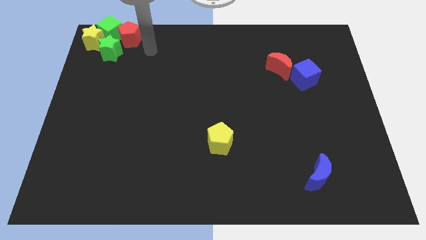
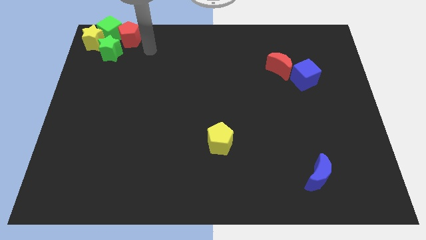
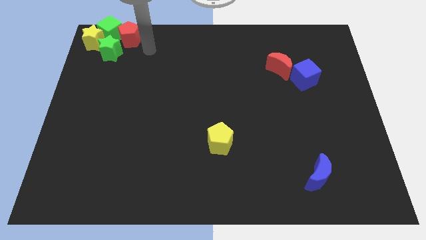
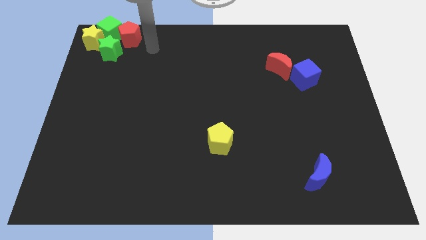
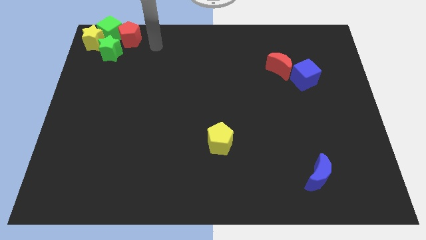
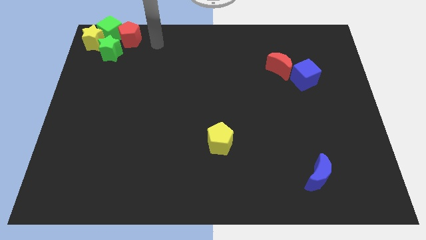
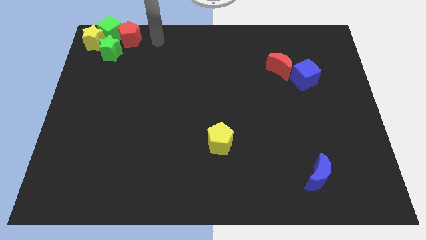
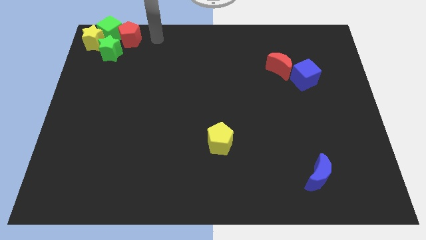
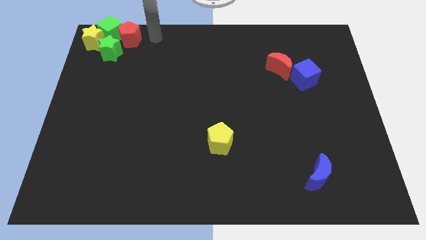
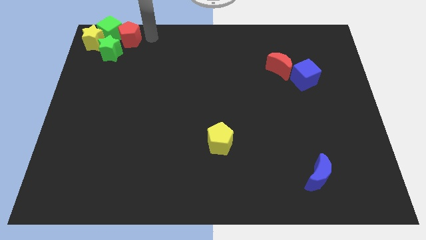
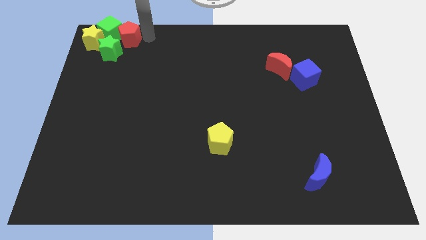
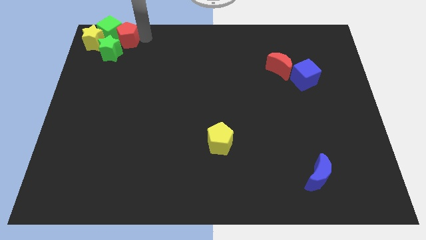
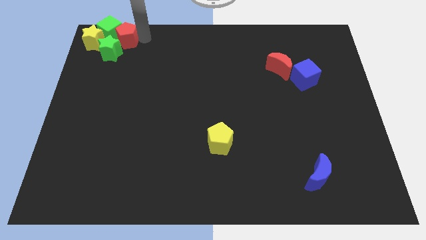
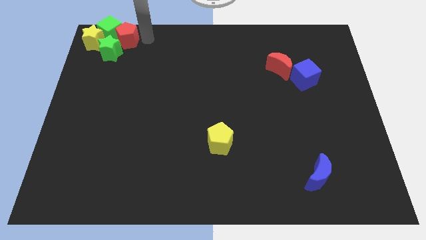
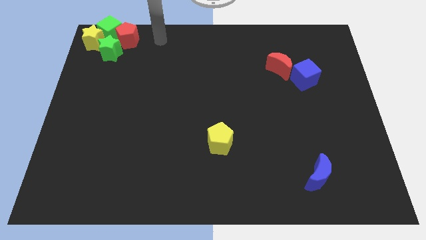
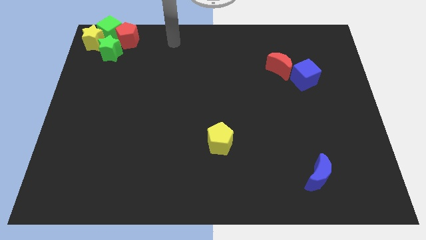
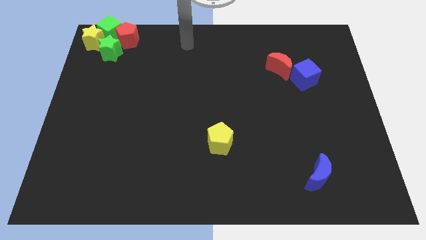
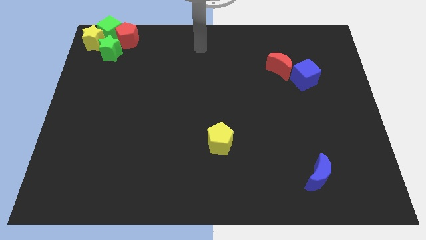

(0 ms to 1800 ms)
move slightly red pentagon into green cube

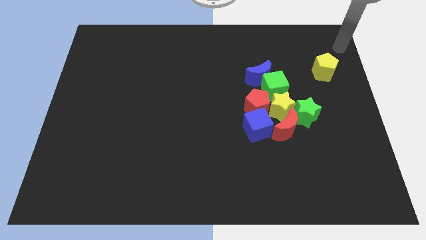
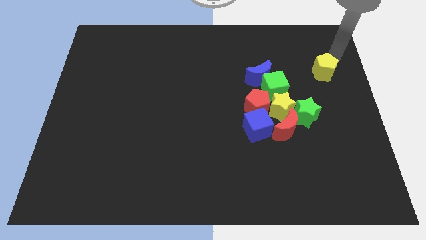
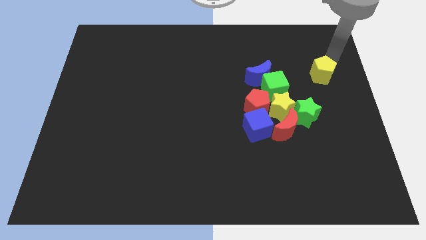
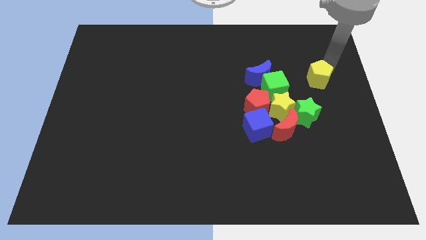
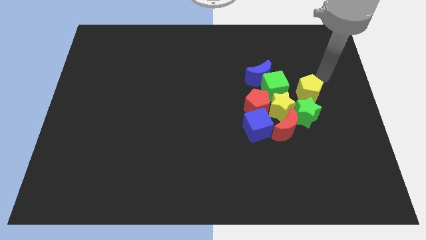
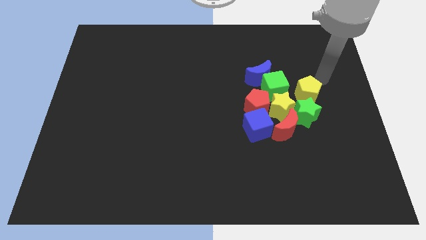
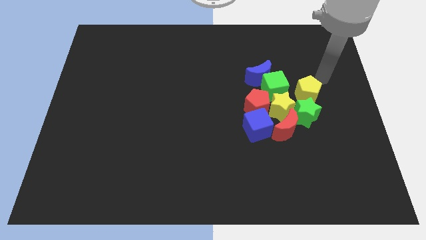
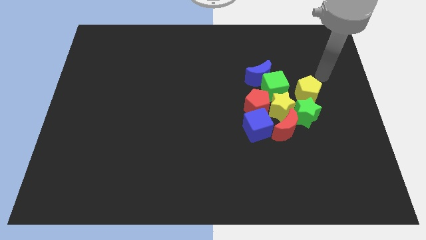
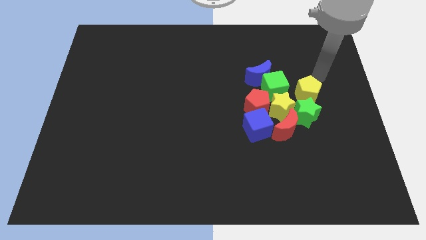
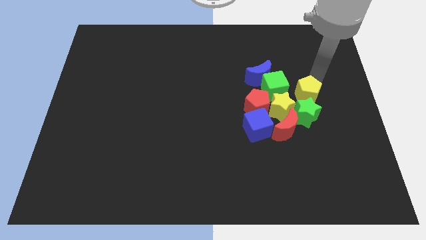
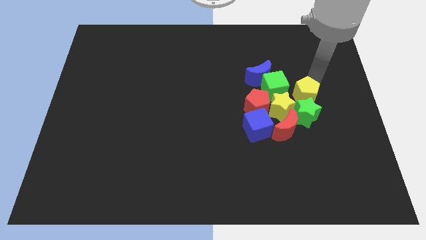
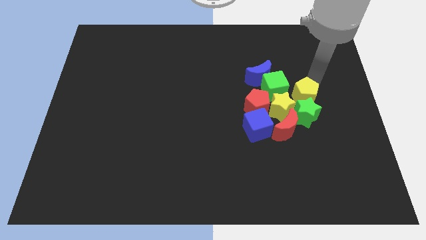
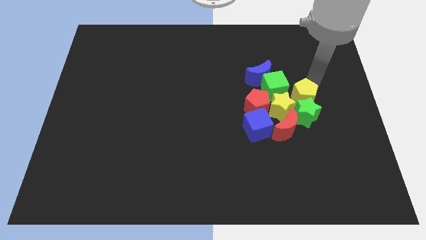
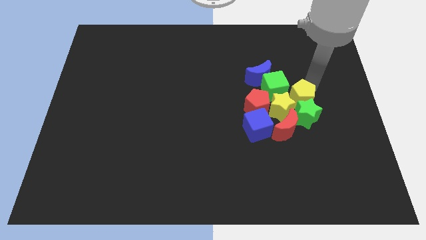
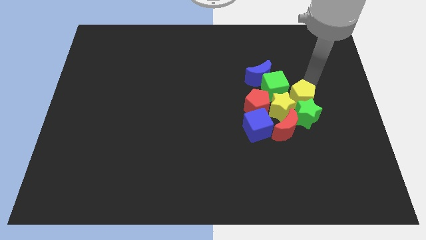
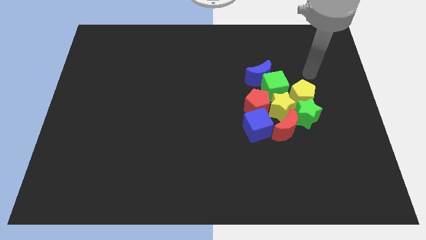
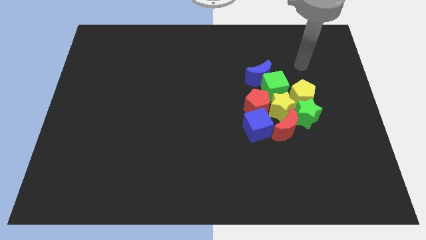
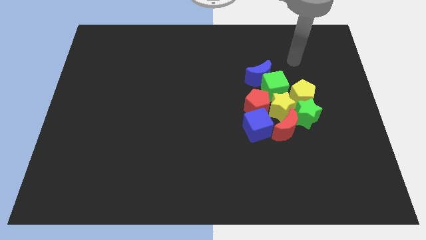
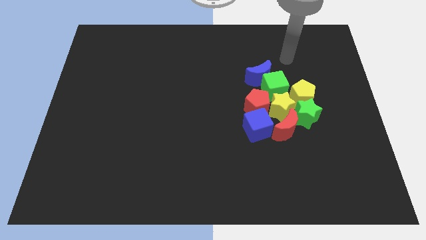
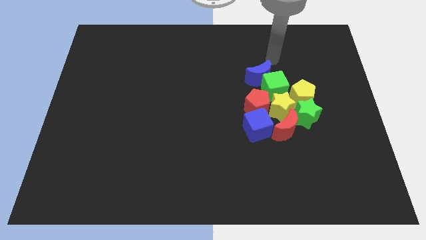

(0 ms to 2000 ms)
add the yellow pentagon into the group of blocks

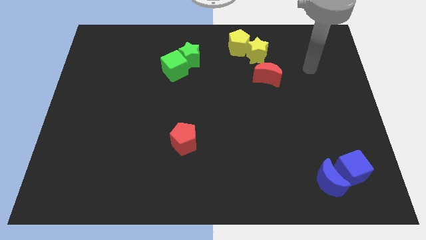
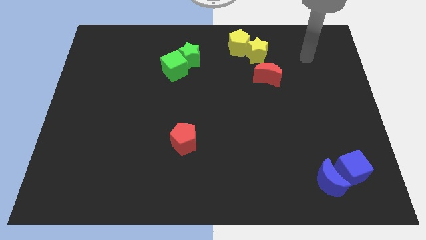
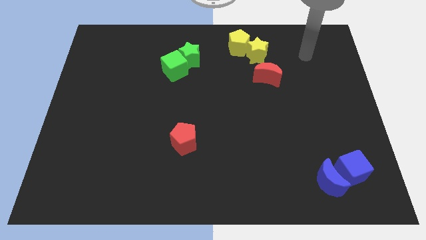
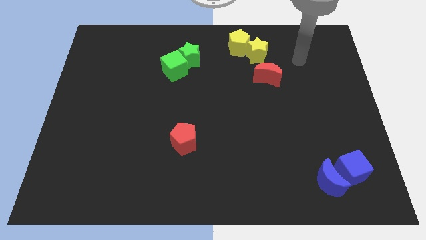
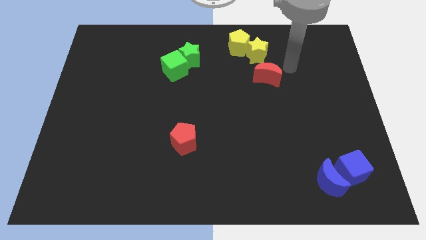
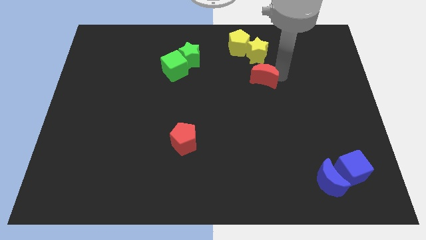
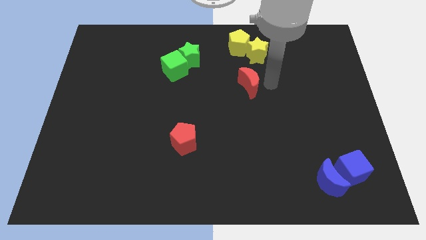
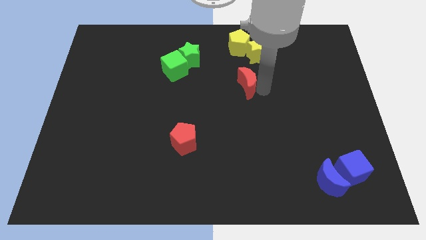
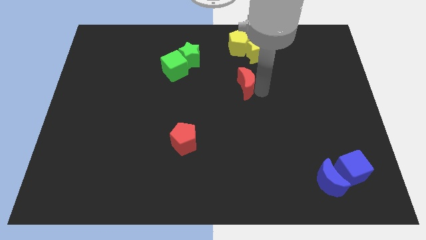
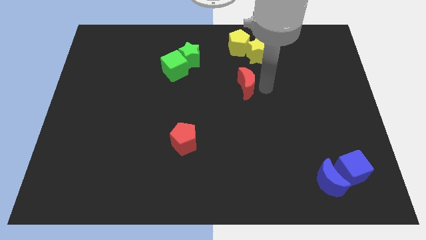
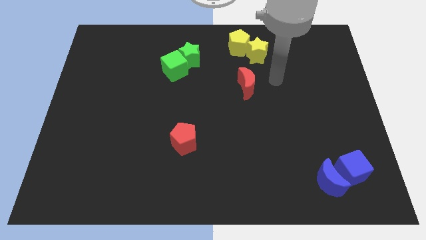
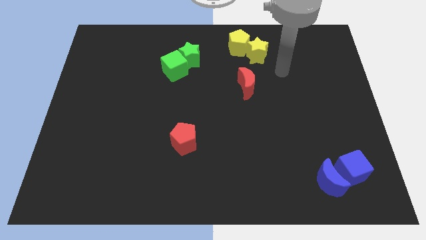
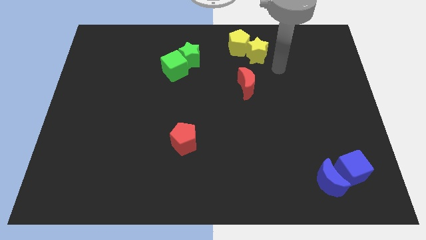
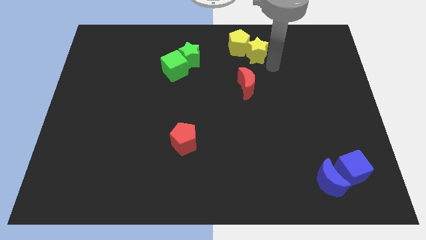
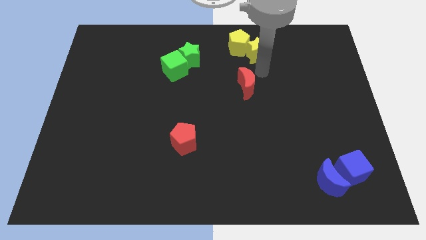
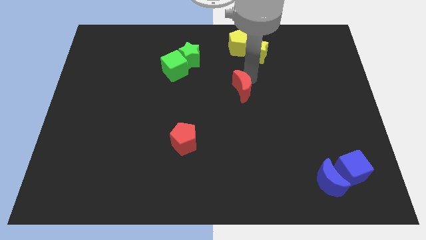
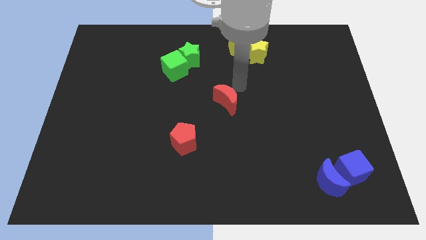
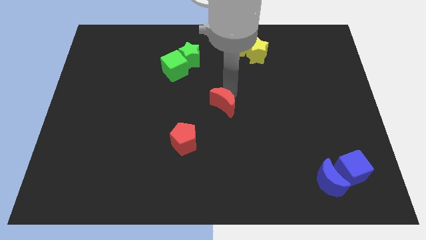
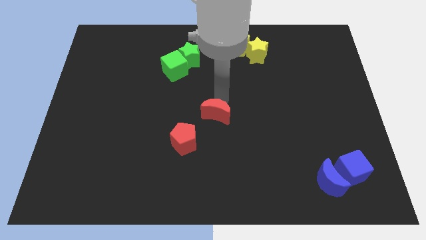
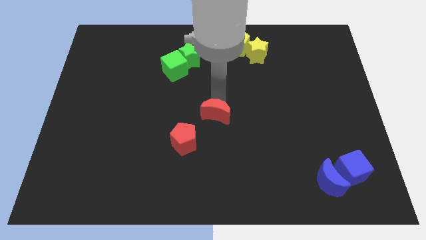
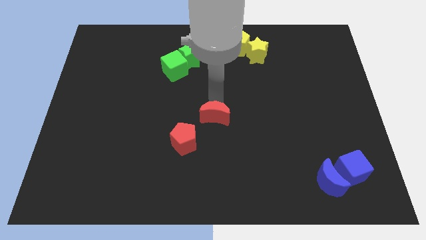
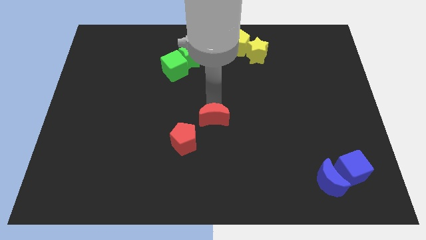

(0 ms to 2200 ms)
push the red moon towards red pentagon

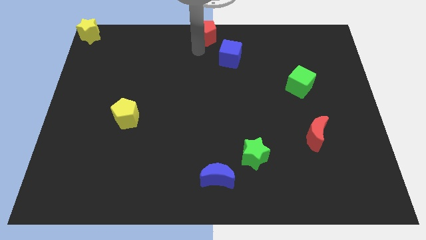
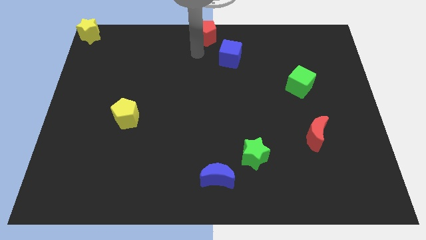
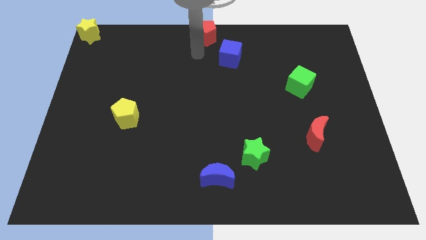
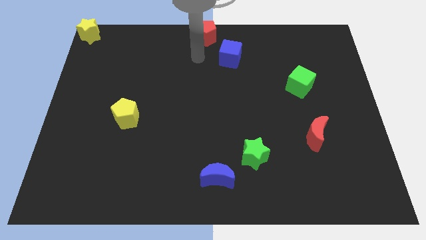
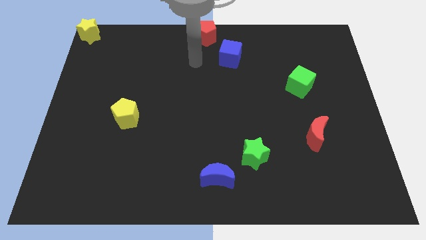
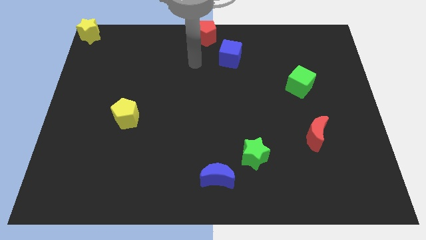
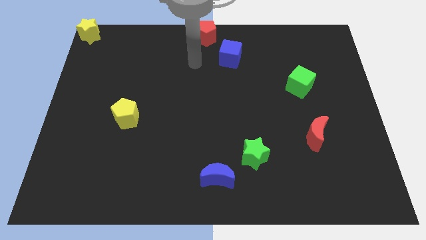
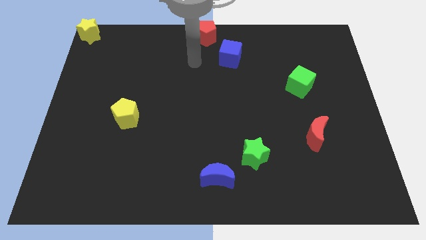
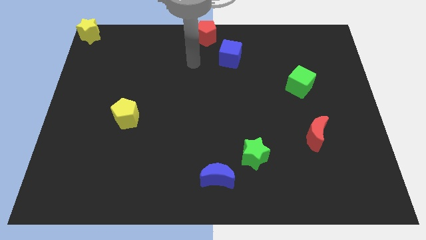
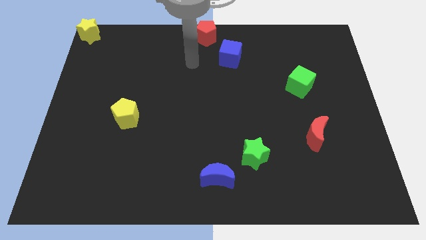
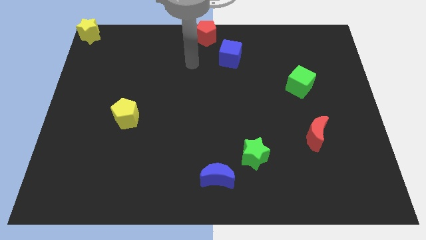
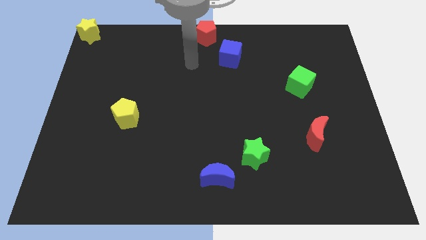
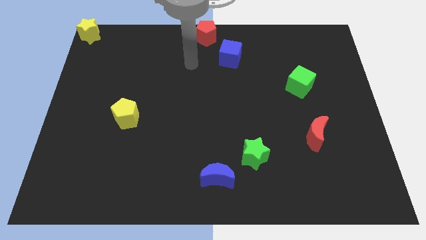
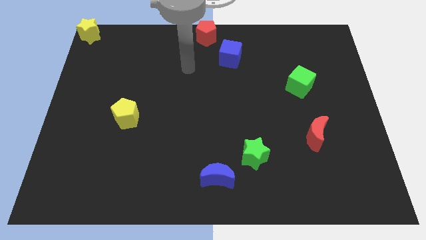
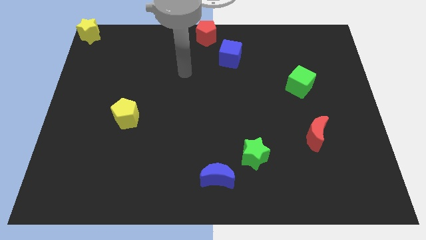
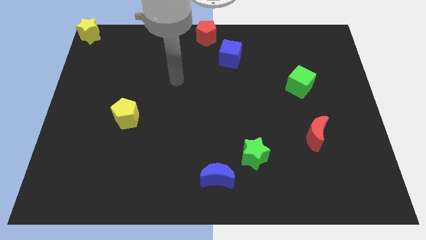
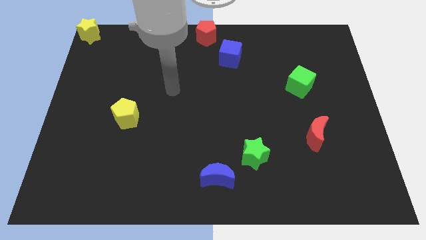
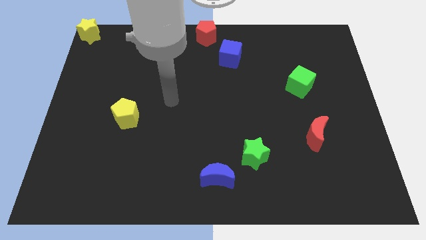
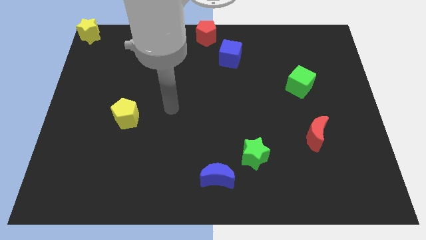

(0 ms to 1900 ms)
move your arm away from red pentagon

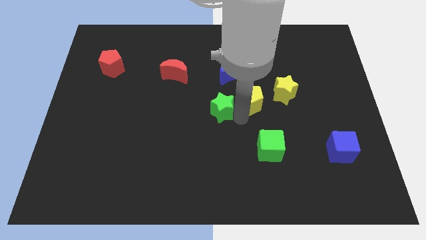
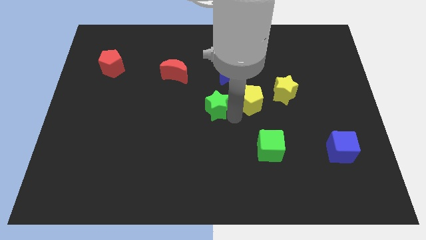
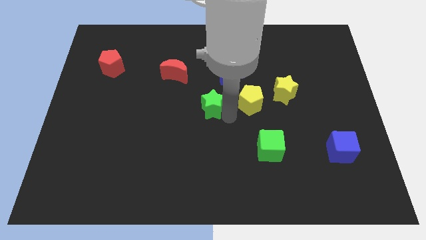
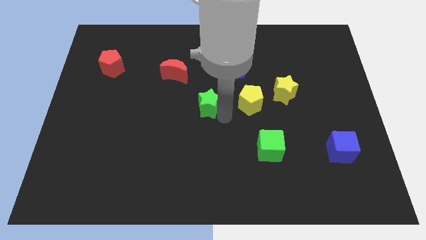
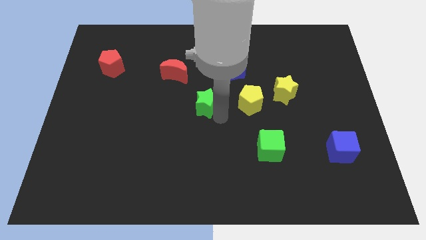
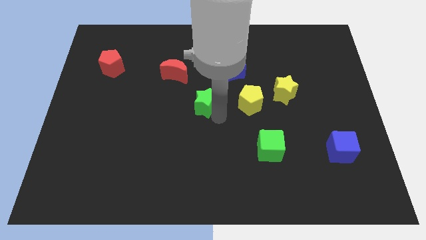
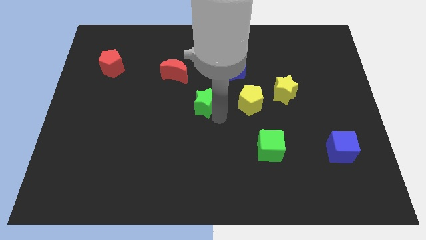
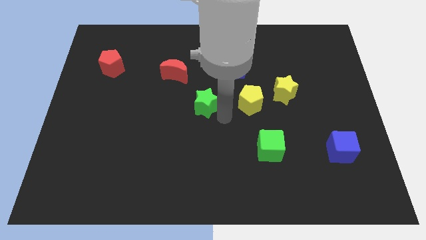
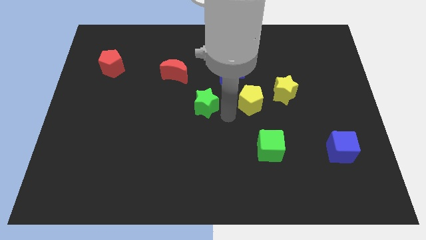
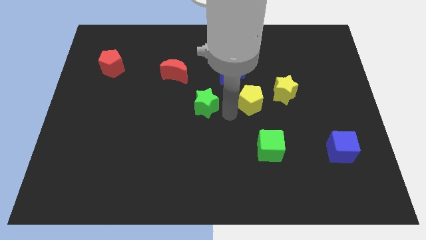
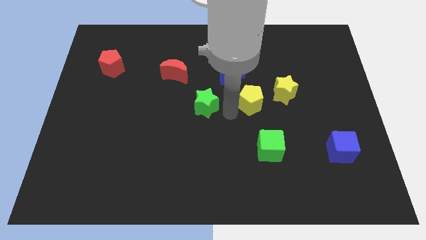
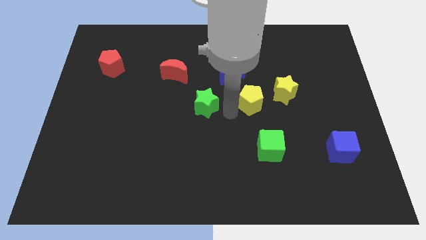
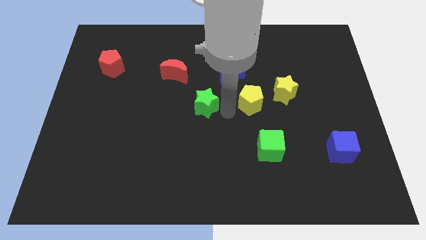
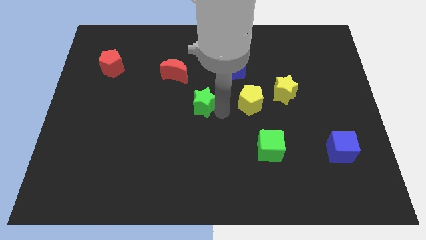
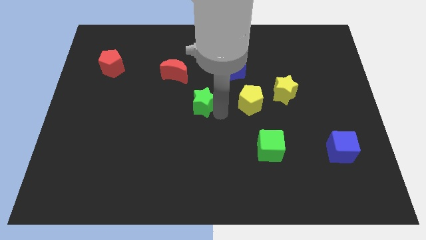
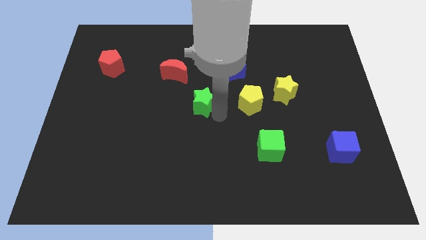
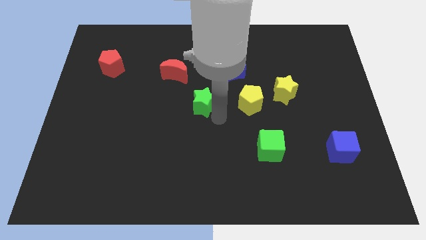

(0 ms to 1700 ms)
separate the green star from yellow pentagon
